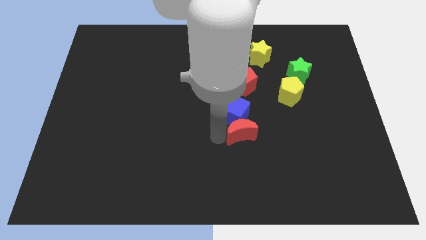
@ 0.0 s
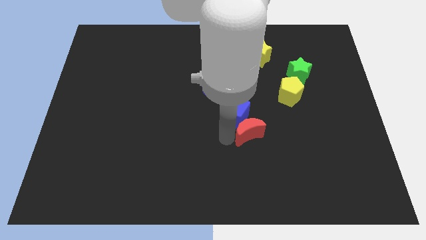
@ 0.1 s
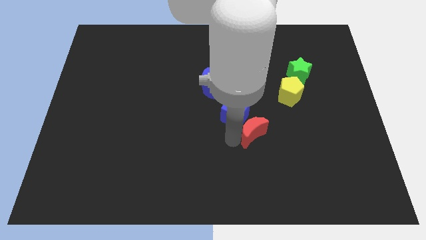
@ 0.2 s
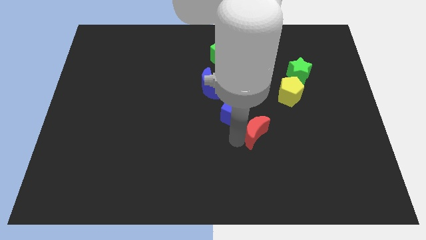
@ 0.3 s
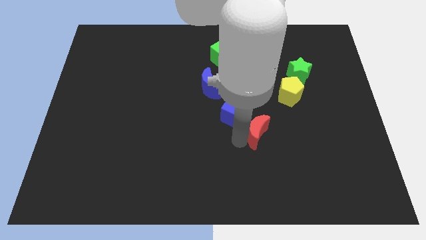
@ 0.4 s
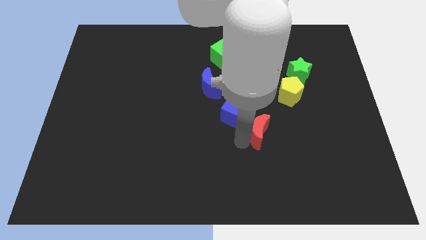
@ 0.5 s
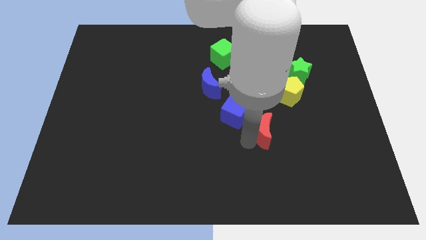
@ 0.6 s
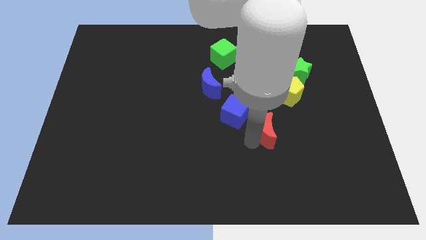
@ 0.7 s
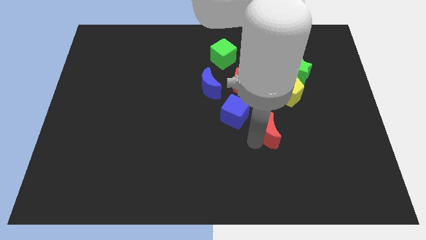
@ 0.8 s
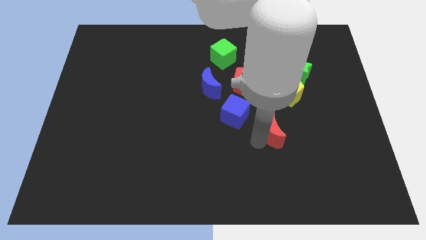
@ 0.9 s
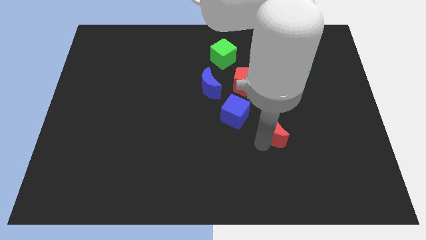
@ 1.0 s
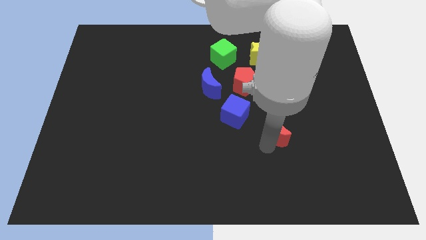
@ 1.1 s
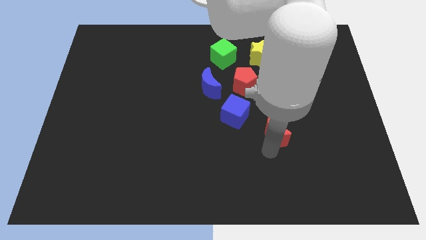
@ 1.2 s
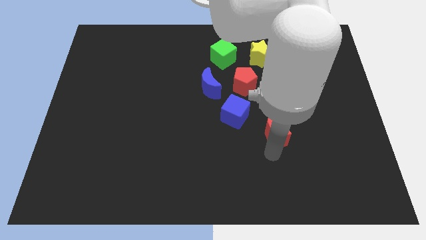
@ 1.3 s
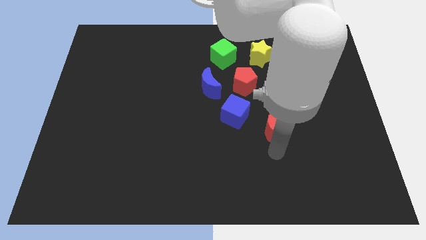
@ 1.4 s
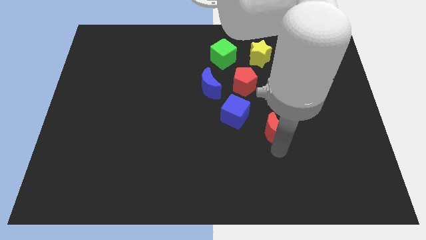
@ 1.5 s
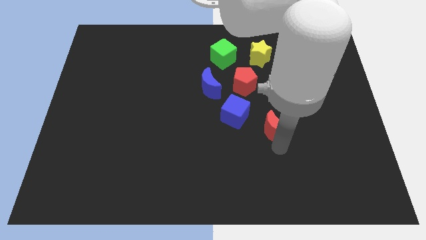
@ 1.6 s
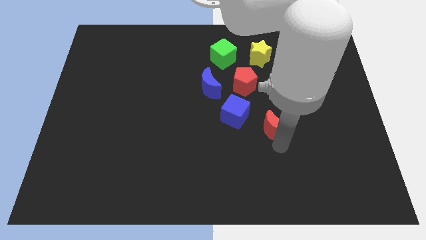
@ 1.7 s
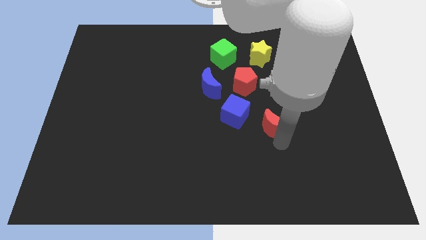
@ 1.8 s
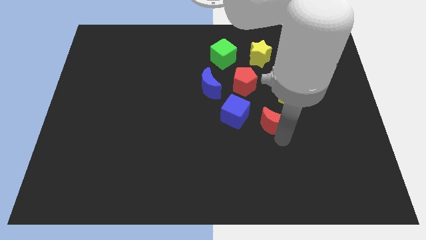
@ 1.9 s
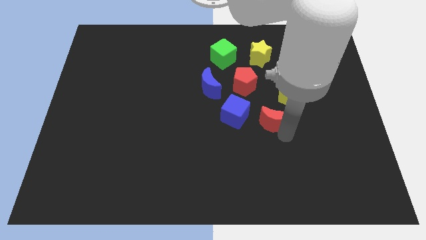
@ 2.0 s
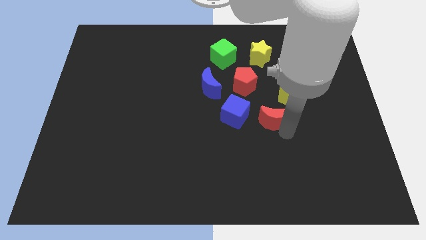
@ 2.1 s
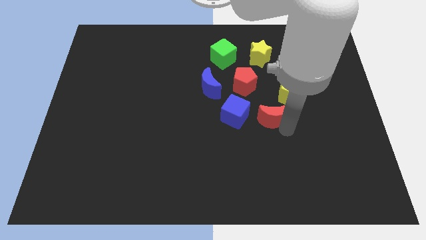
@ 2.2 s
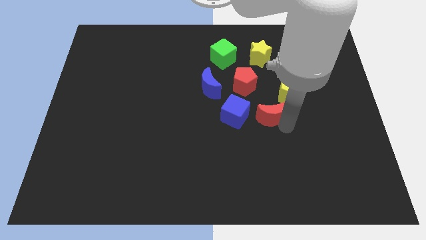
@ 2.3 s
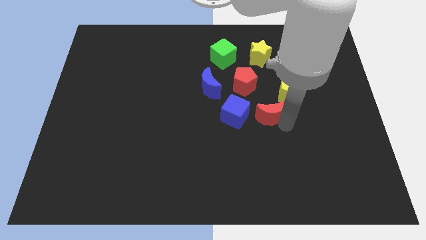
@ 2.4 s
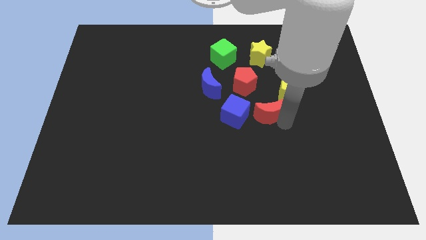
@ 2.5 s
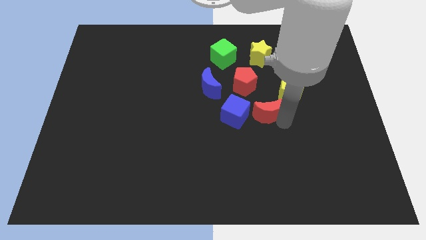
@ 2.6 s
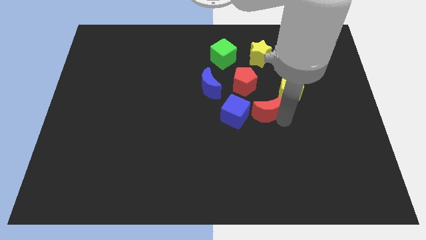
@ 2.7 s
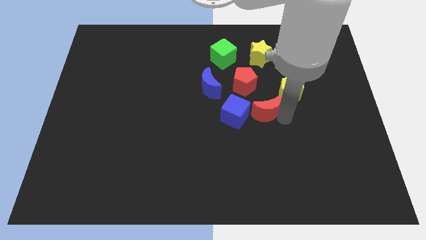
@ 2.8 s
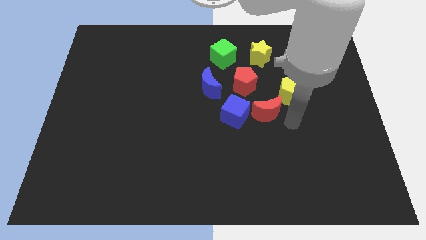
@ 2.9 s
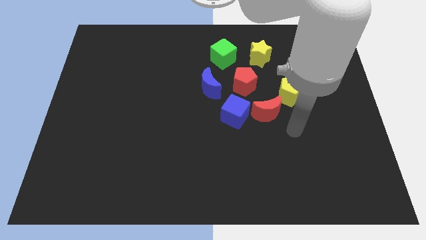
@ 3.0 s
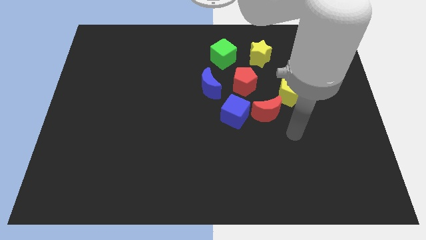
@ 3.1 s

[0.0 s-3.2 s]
place the red moon to the right of blue cube

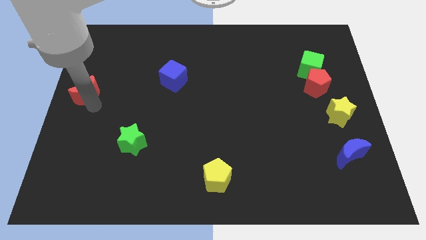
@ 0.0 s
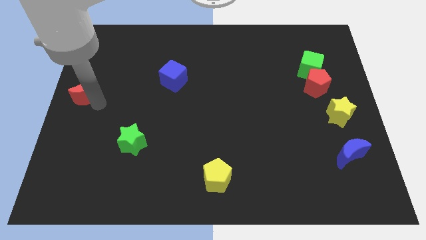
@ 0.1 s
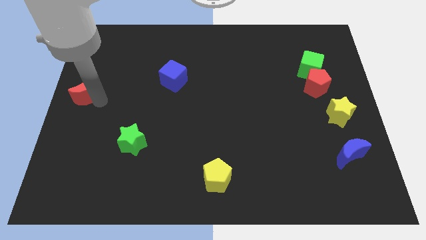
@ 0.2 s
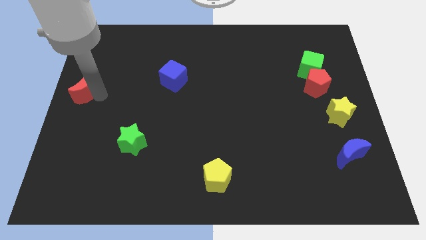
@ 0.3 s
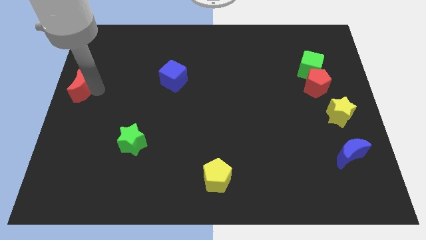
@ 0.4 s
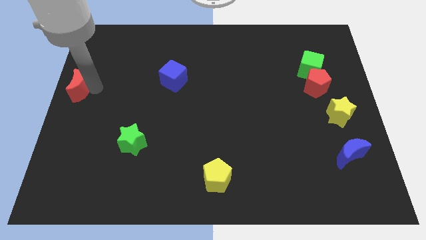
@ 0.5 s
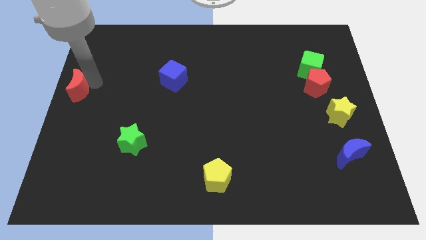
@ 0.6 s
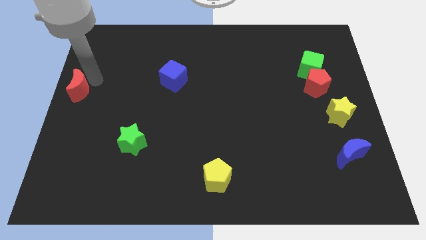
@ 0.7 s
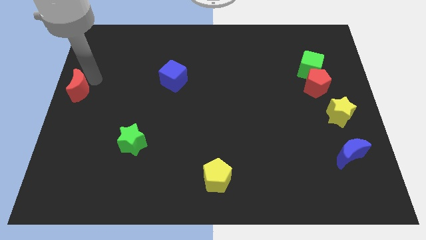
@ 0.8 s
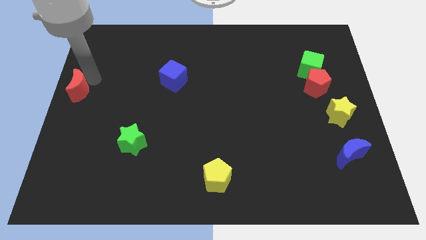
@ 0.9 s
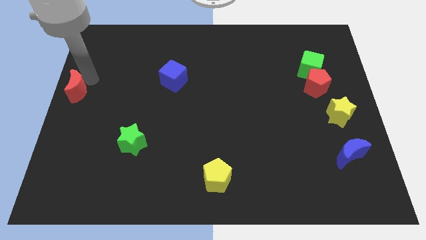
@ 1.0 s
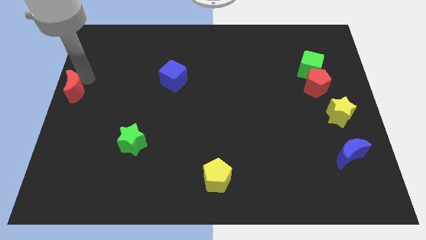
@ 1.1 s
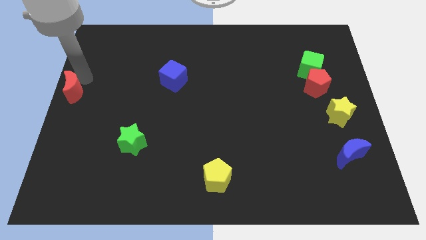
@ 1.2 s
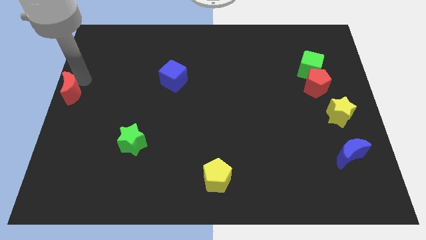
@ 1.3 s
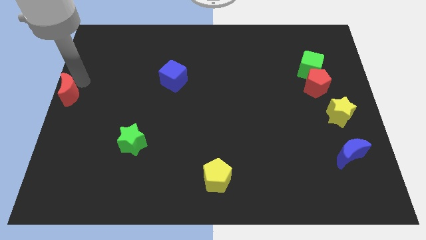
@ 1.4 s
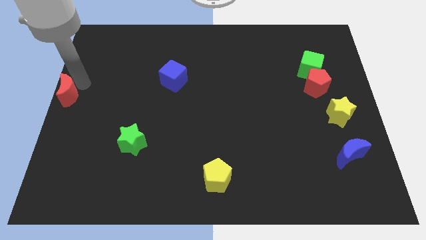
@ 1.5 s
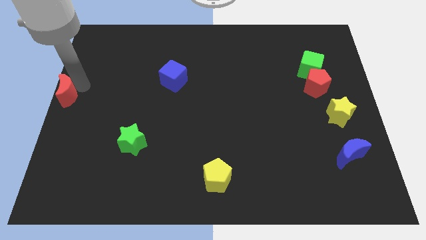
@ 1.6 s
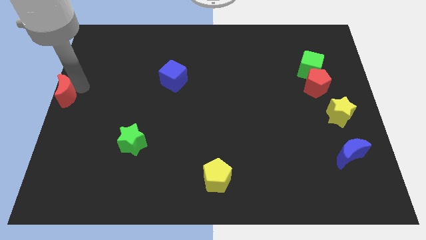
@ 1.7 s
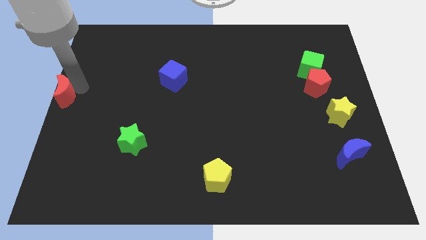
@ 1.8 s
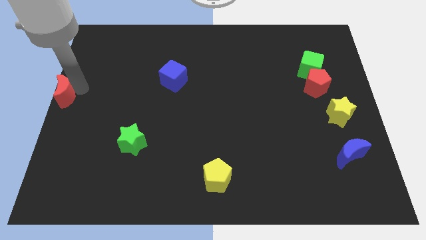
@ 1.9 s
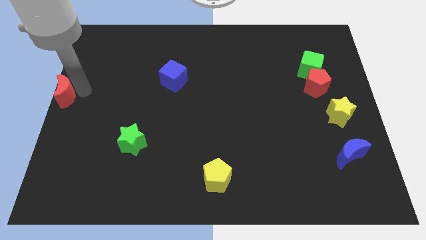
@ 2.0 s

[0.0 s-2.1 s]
place the red crescent at the center left

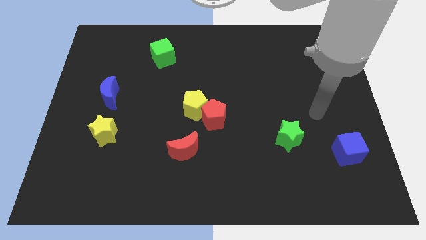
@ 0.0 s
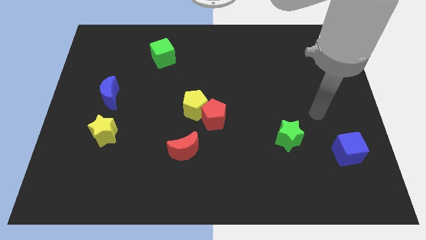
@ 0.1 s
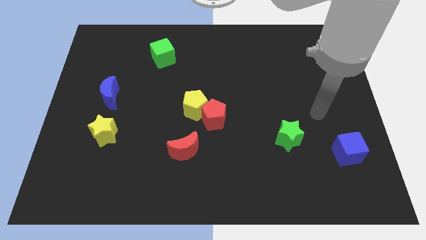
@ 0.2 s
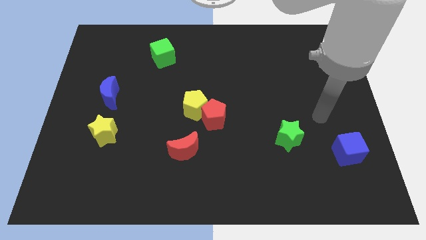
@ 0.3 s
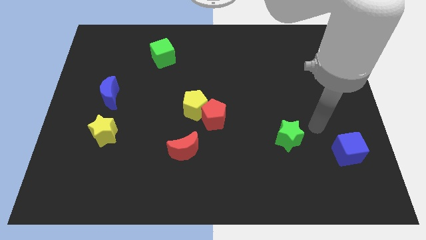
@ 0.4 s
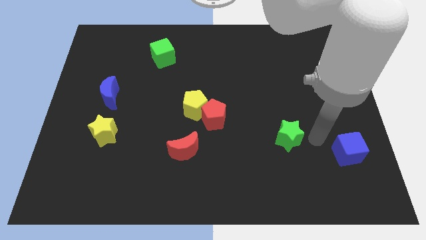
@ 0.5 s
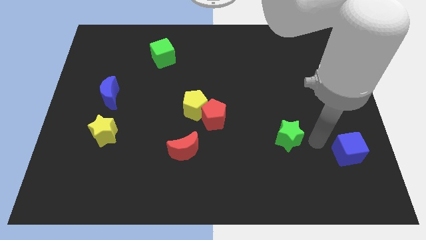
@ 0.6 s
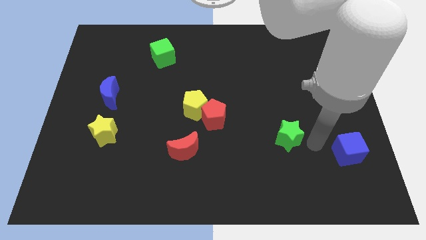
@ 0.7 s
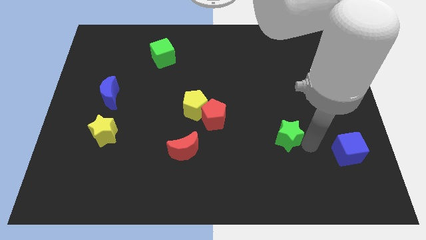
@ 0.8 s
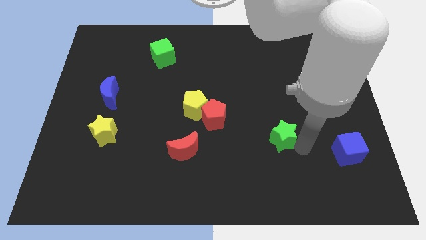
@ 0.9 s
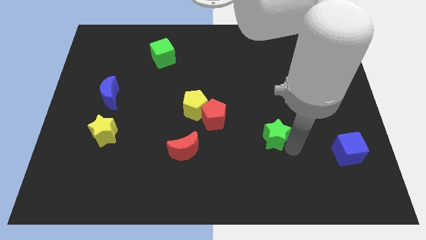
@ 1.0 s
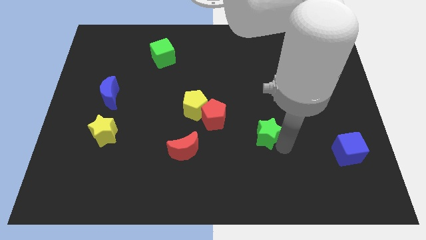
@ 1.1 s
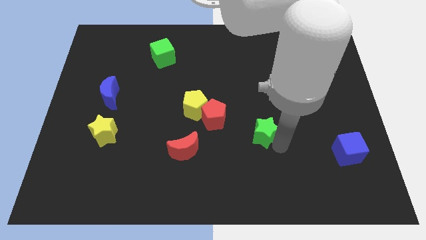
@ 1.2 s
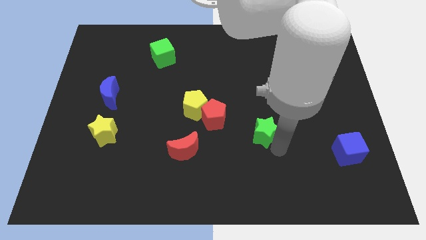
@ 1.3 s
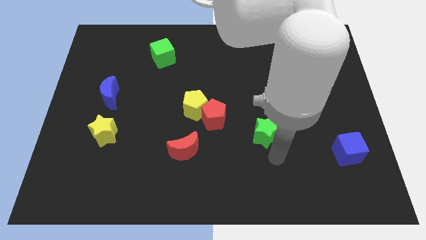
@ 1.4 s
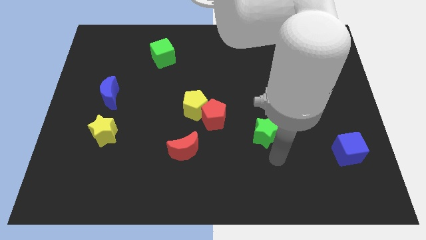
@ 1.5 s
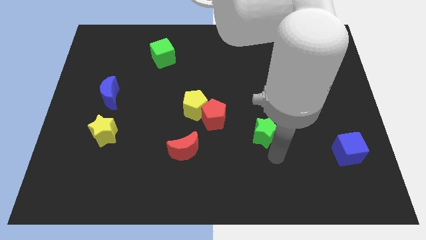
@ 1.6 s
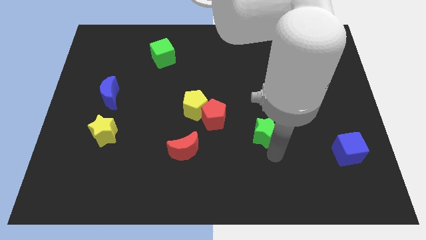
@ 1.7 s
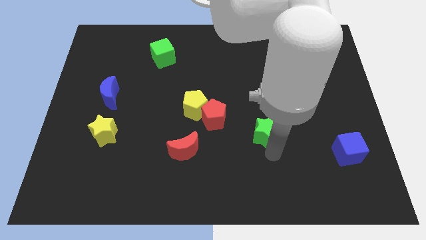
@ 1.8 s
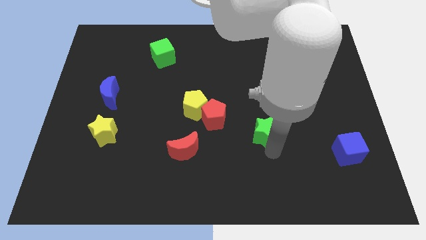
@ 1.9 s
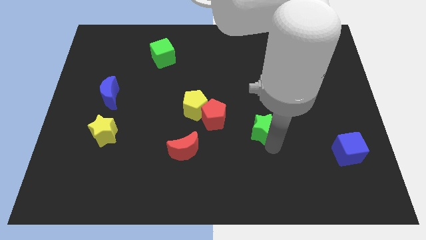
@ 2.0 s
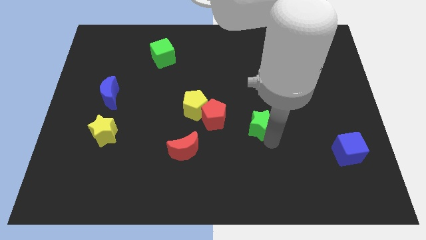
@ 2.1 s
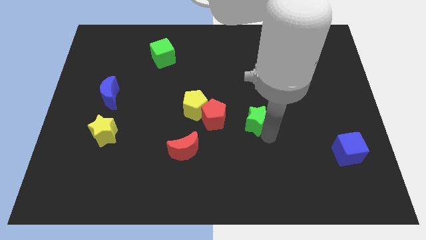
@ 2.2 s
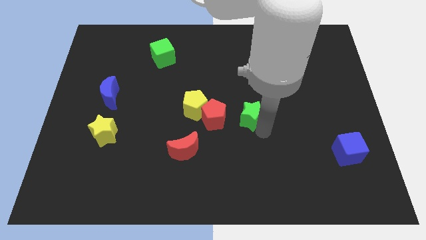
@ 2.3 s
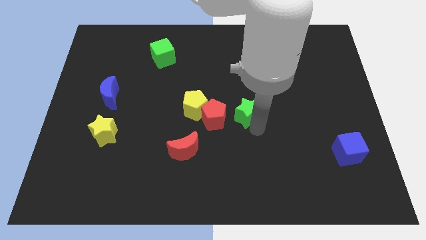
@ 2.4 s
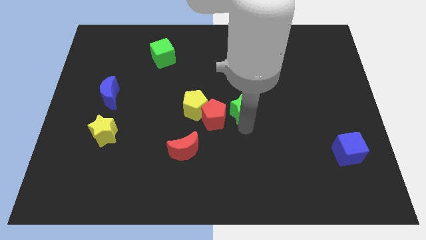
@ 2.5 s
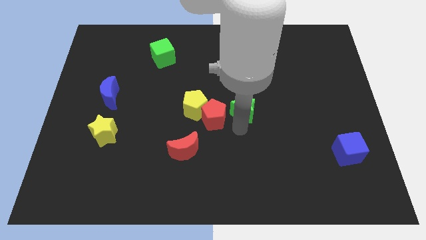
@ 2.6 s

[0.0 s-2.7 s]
move the green star to the right side of the red pentagon

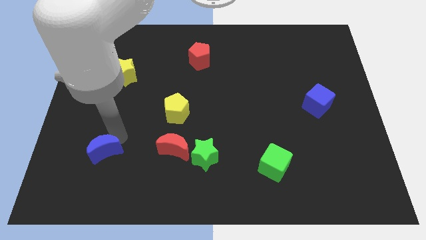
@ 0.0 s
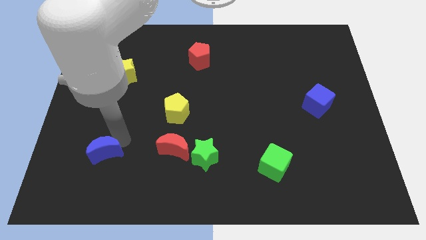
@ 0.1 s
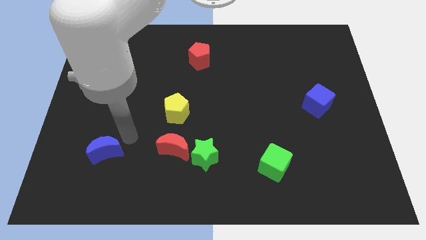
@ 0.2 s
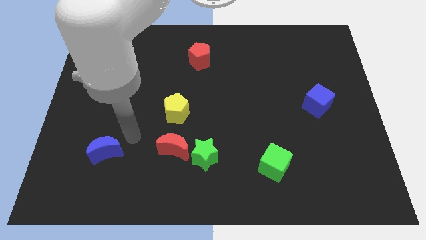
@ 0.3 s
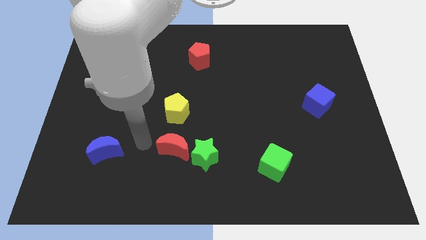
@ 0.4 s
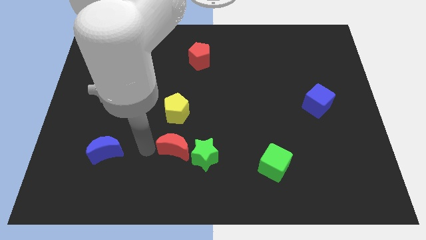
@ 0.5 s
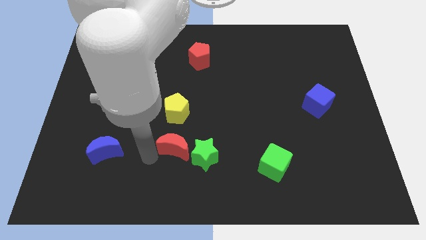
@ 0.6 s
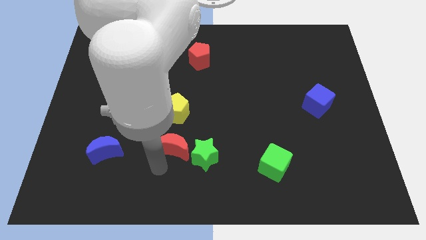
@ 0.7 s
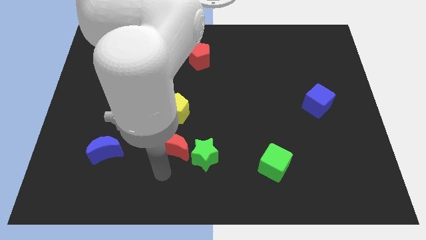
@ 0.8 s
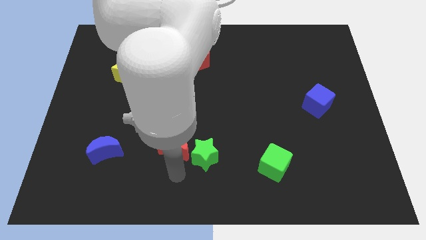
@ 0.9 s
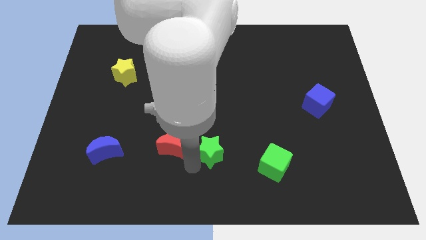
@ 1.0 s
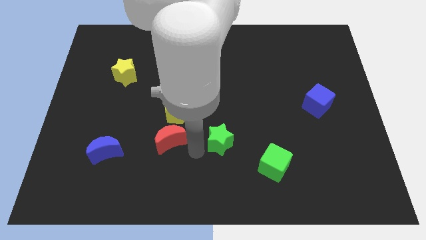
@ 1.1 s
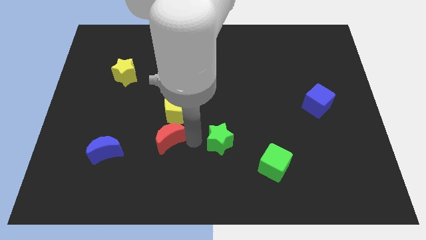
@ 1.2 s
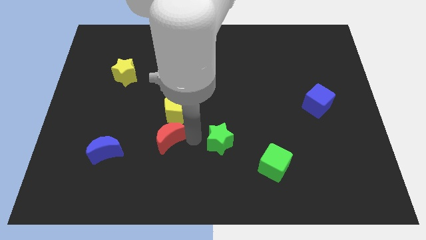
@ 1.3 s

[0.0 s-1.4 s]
separate the red crescent from the green star
